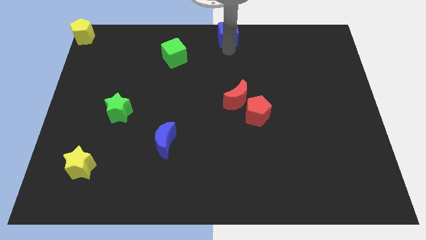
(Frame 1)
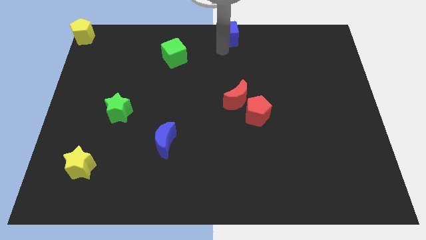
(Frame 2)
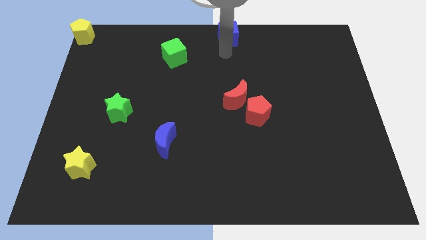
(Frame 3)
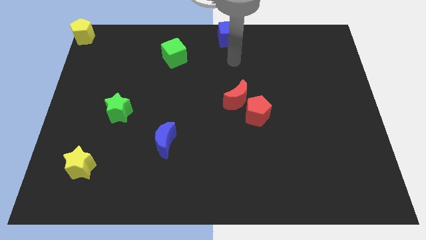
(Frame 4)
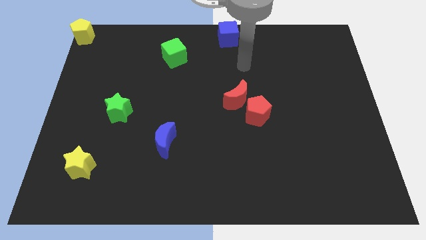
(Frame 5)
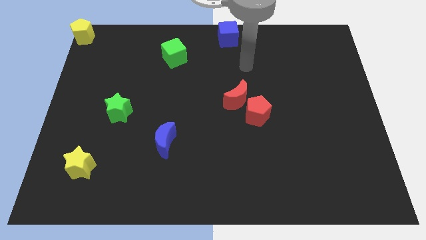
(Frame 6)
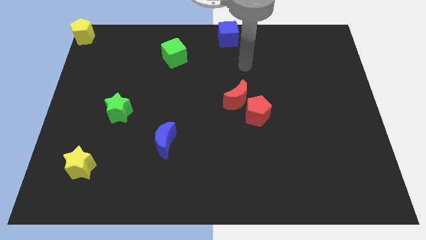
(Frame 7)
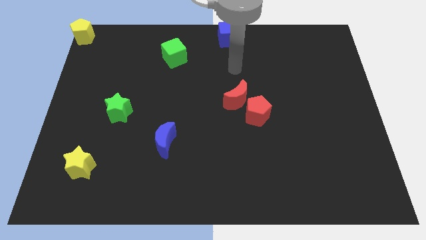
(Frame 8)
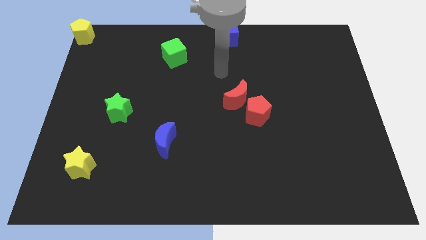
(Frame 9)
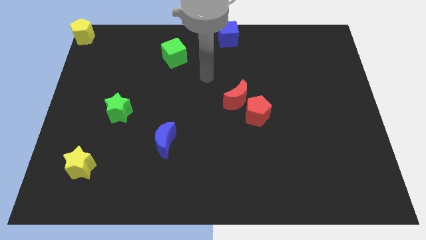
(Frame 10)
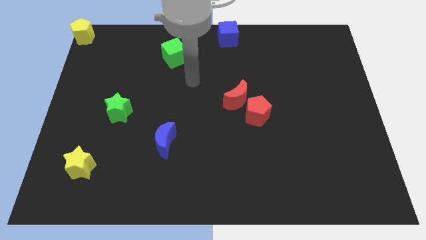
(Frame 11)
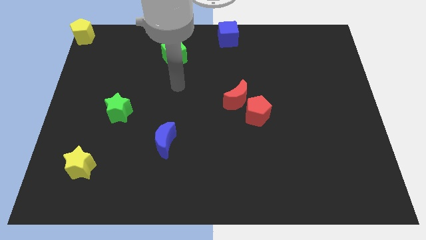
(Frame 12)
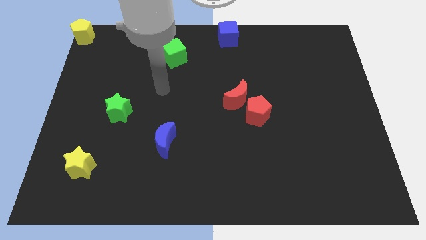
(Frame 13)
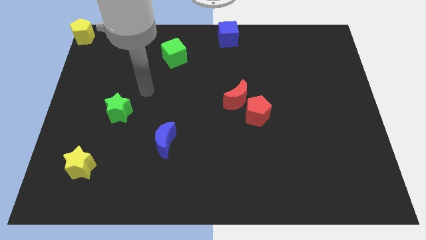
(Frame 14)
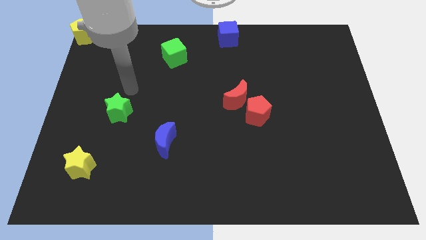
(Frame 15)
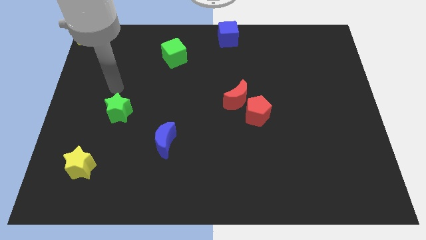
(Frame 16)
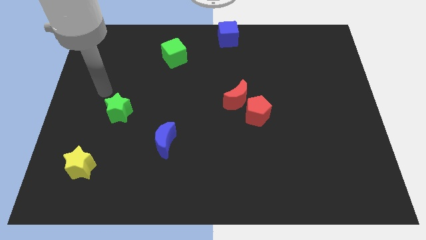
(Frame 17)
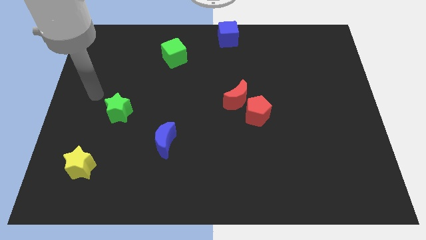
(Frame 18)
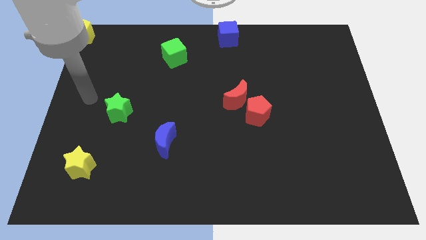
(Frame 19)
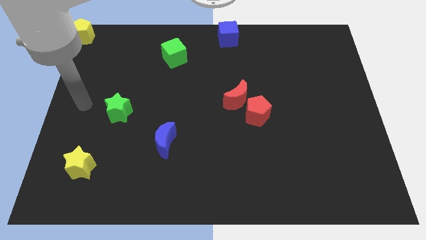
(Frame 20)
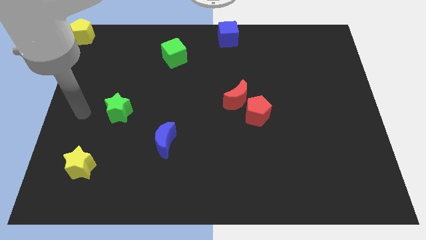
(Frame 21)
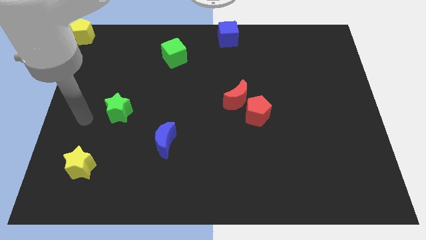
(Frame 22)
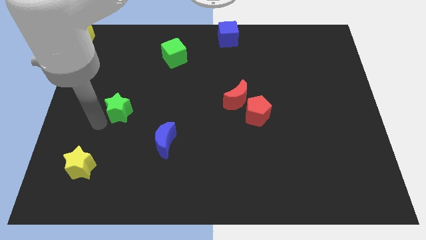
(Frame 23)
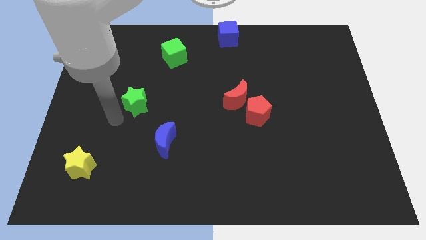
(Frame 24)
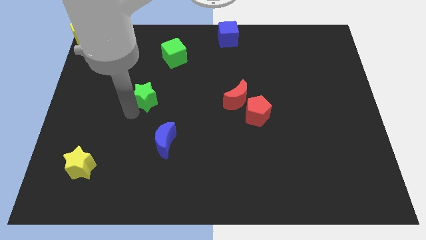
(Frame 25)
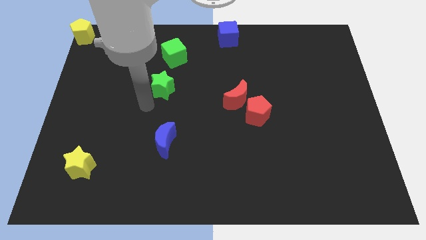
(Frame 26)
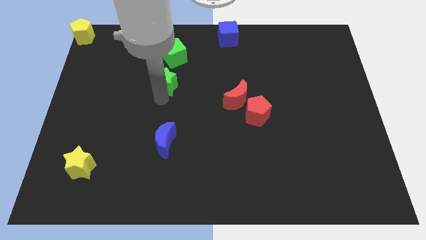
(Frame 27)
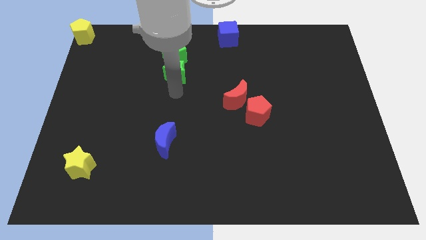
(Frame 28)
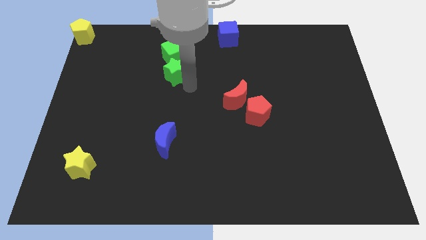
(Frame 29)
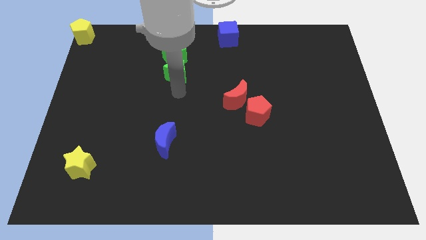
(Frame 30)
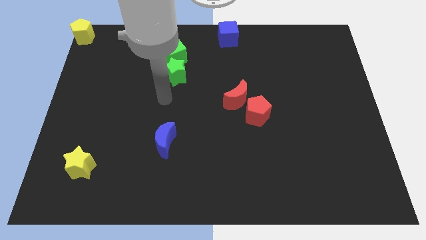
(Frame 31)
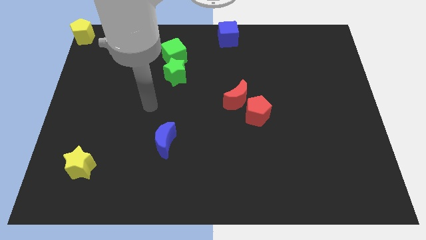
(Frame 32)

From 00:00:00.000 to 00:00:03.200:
push green star close to the green cube

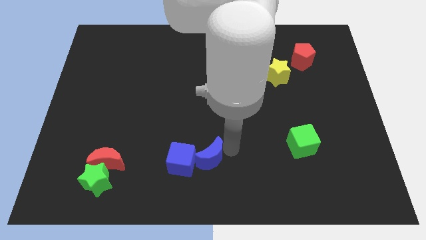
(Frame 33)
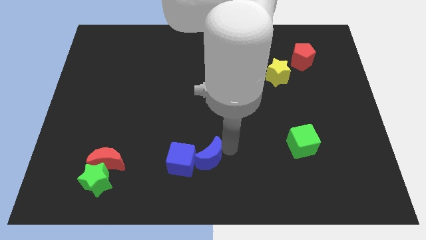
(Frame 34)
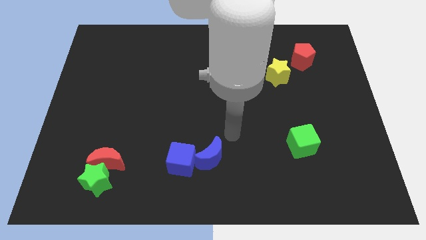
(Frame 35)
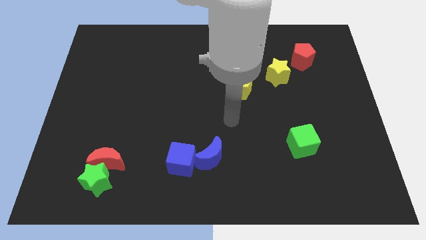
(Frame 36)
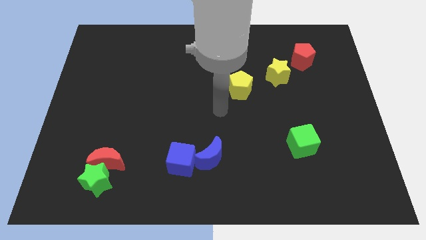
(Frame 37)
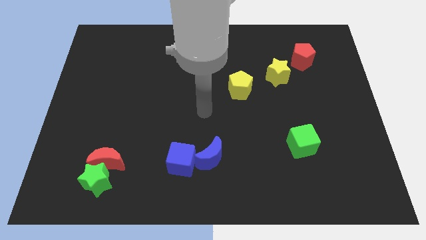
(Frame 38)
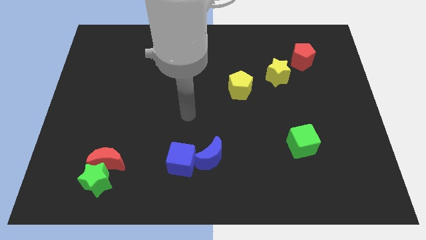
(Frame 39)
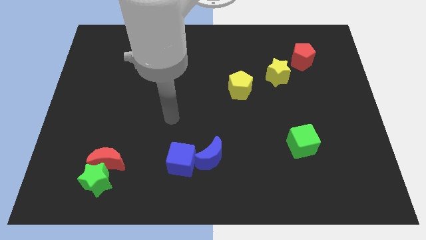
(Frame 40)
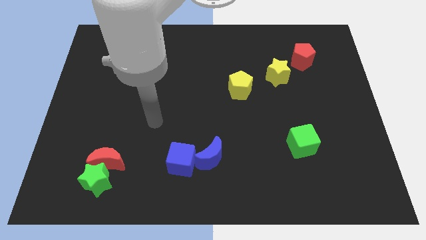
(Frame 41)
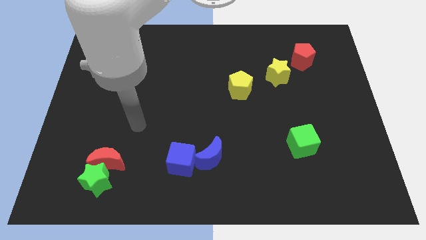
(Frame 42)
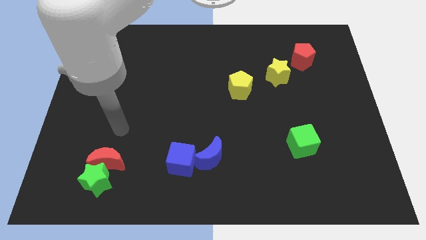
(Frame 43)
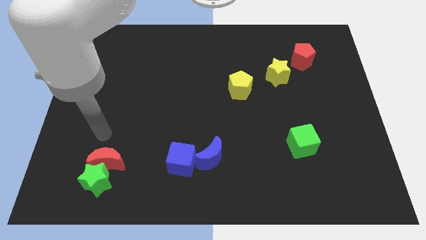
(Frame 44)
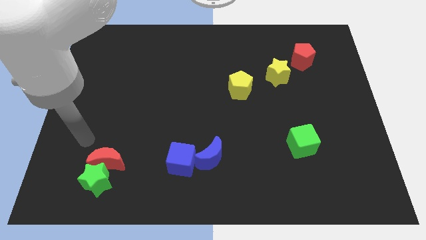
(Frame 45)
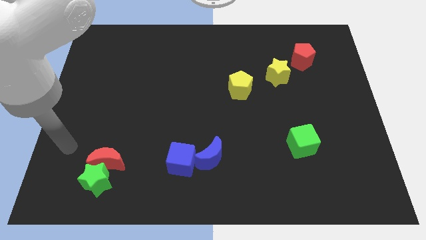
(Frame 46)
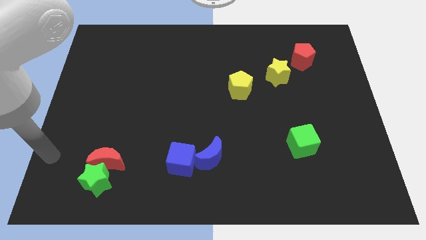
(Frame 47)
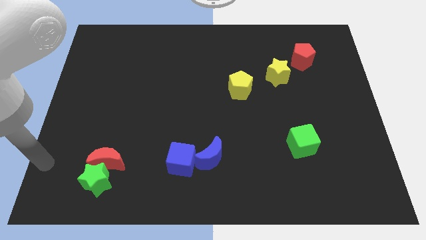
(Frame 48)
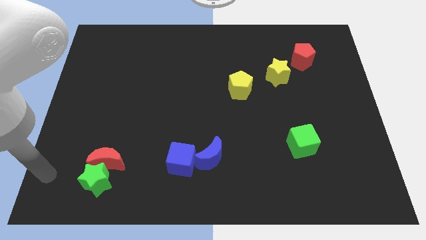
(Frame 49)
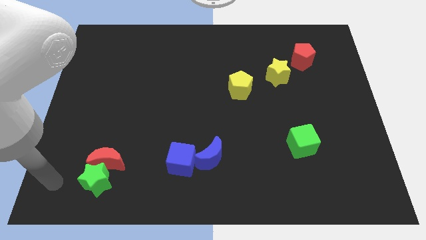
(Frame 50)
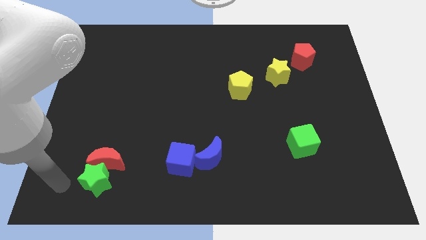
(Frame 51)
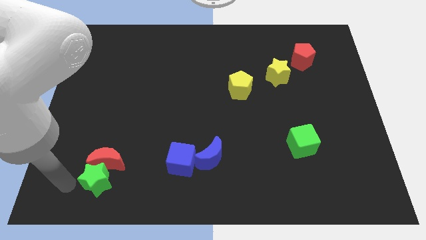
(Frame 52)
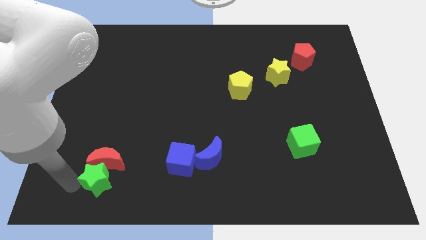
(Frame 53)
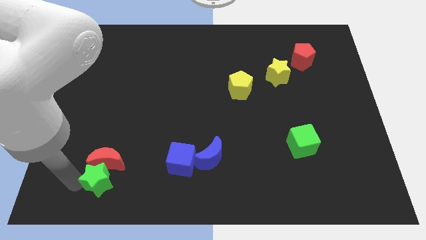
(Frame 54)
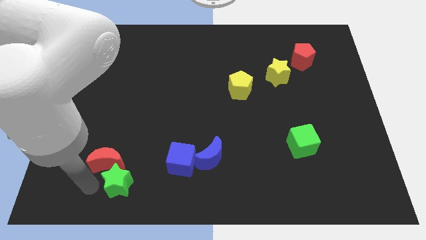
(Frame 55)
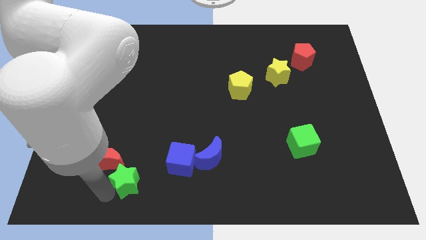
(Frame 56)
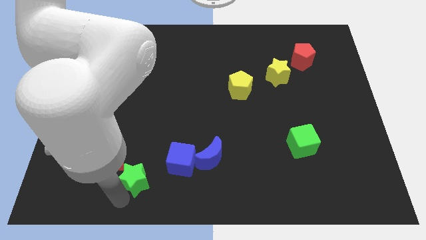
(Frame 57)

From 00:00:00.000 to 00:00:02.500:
move the arm away from the blue moon

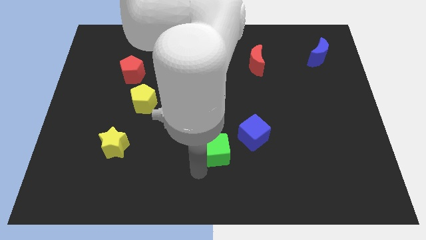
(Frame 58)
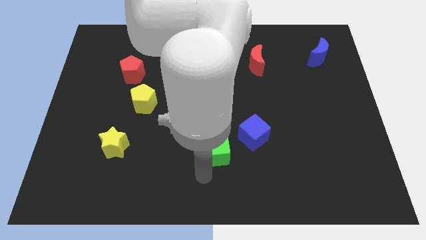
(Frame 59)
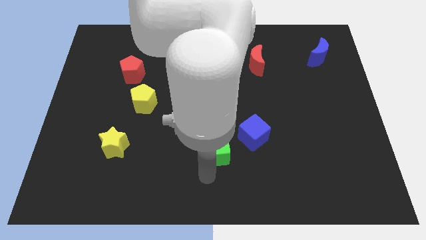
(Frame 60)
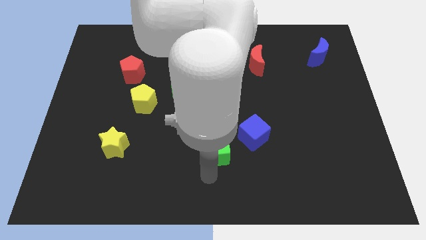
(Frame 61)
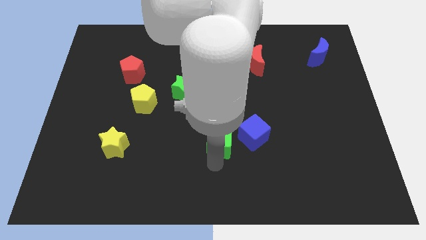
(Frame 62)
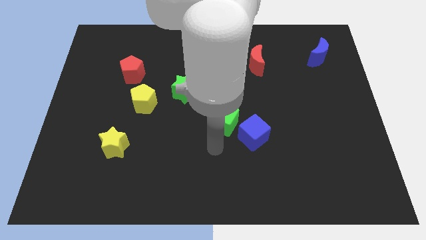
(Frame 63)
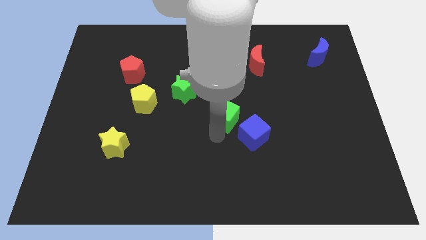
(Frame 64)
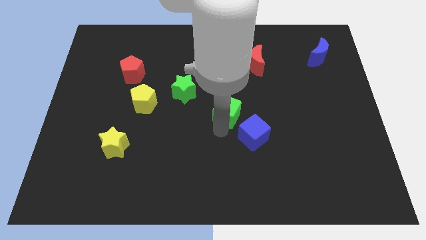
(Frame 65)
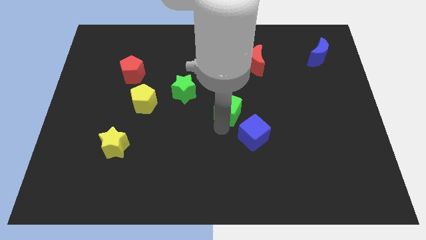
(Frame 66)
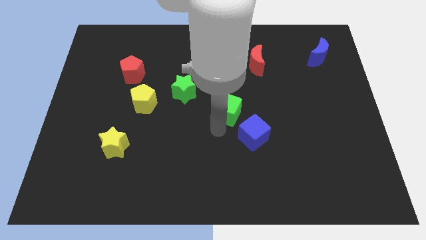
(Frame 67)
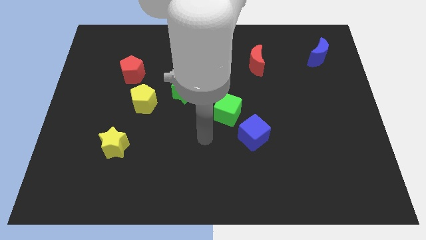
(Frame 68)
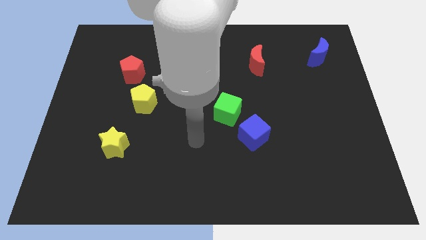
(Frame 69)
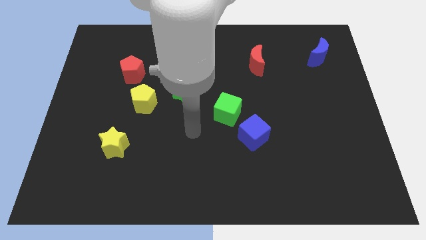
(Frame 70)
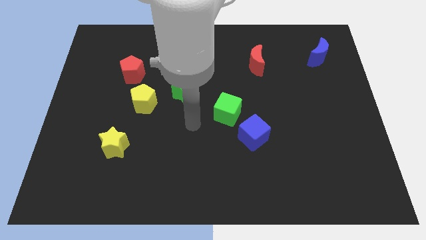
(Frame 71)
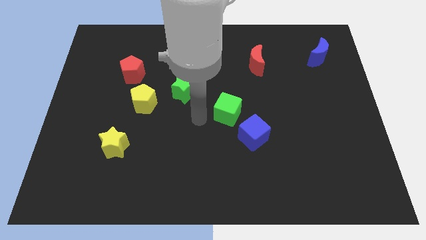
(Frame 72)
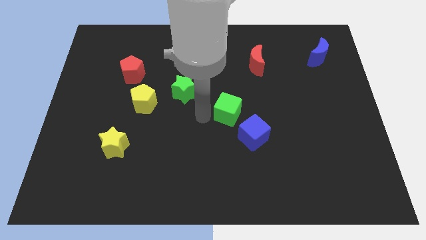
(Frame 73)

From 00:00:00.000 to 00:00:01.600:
move the green cube to the center

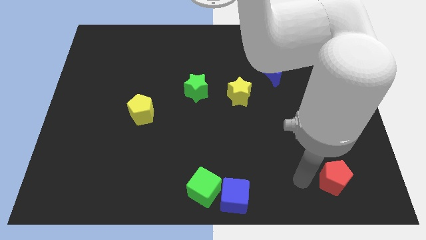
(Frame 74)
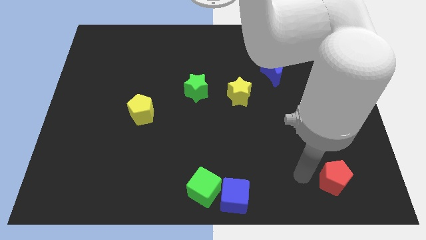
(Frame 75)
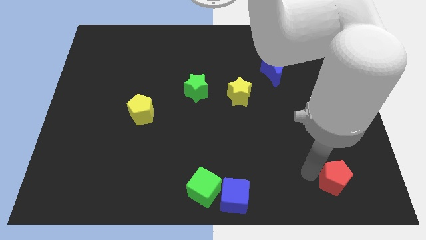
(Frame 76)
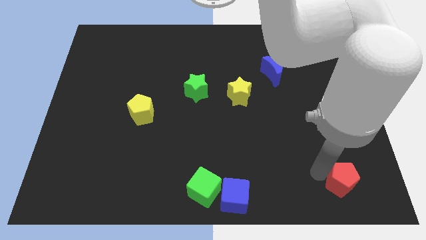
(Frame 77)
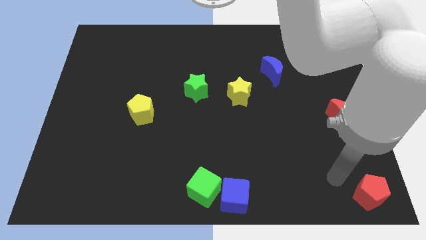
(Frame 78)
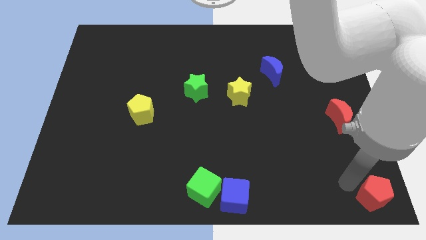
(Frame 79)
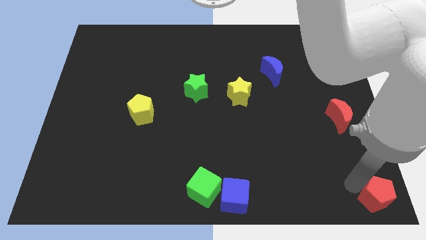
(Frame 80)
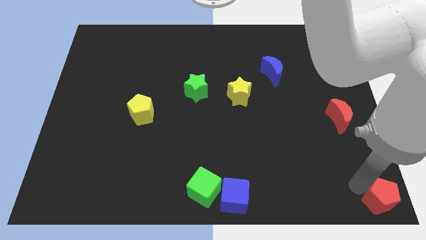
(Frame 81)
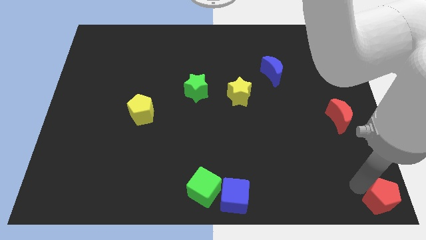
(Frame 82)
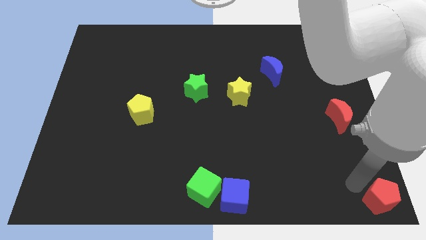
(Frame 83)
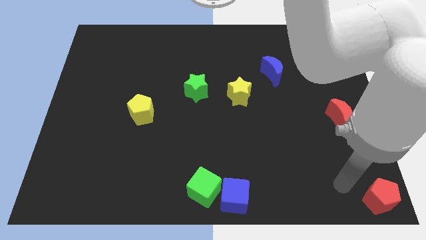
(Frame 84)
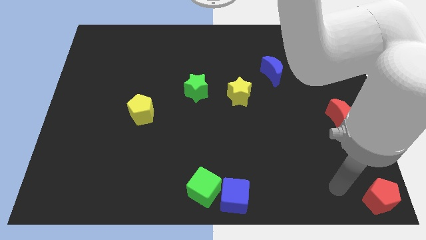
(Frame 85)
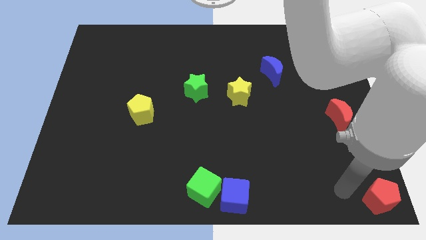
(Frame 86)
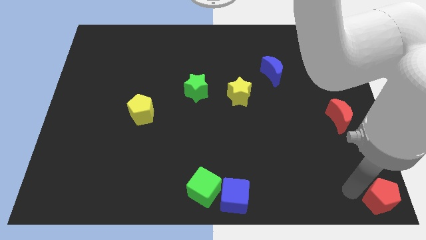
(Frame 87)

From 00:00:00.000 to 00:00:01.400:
drag the red pentagon at the extreme bottom right of the board

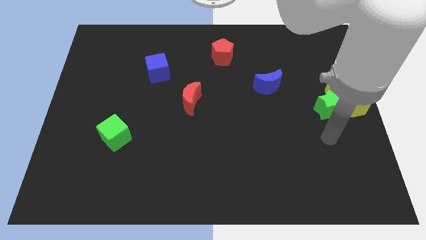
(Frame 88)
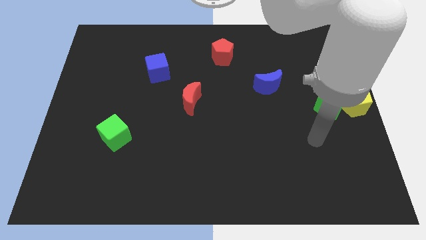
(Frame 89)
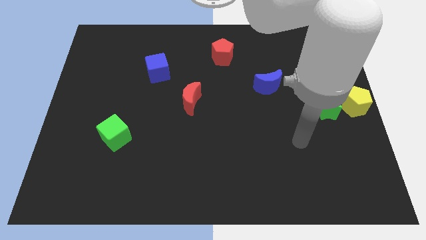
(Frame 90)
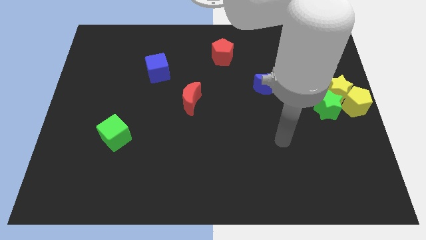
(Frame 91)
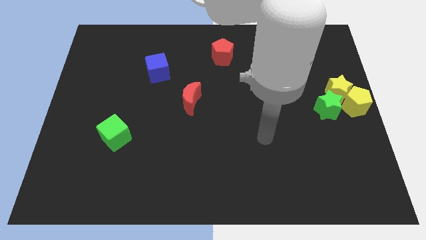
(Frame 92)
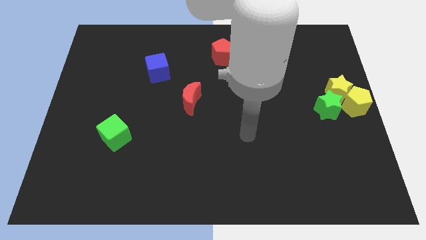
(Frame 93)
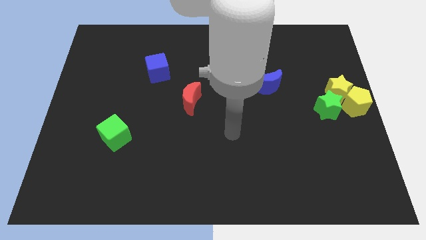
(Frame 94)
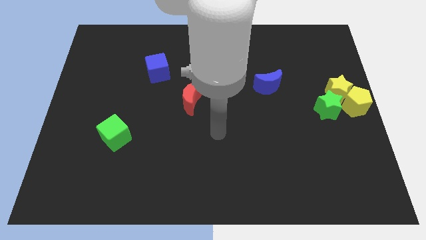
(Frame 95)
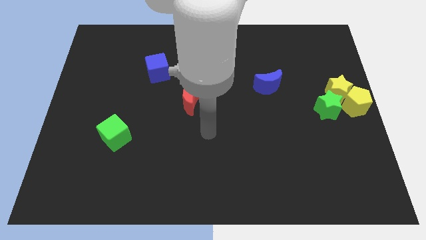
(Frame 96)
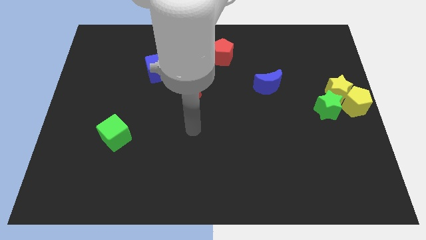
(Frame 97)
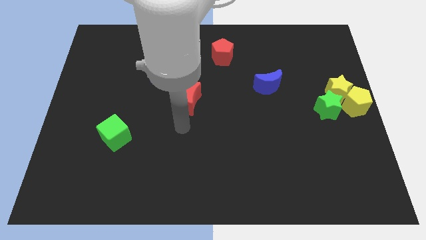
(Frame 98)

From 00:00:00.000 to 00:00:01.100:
move the arm below the red moon
